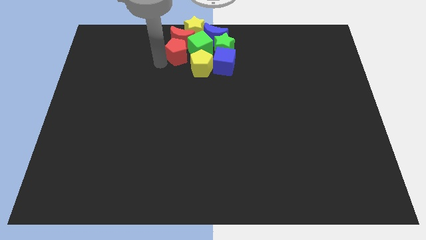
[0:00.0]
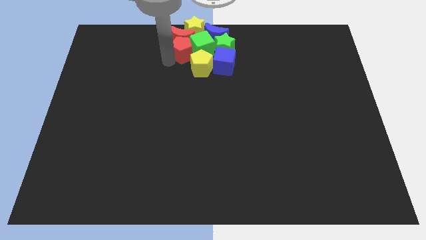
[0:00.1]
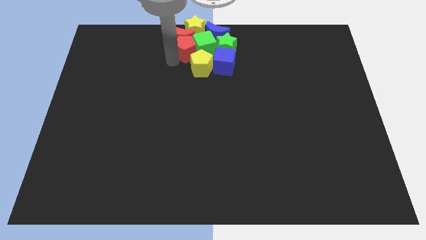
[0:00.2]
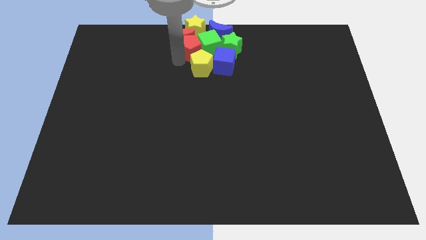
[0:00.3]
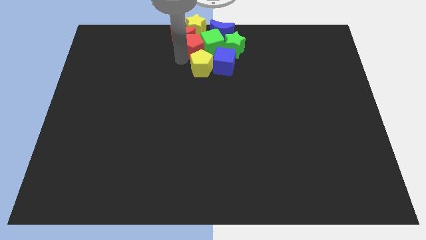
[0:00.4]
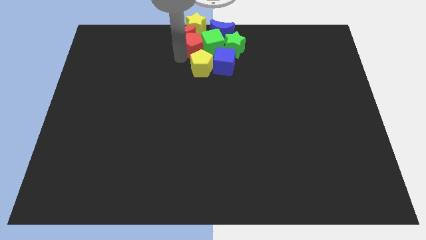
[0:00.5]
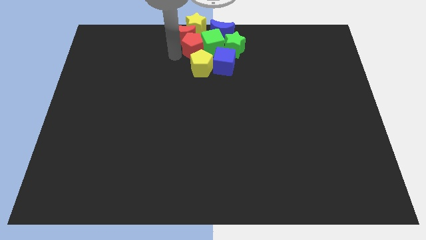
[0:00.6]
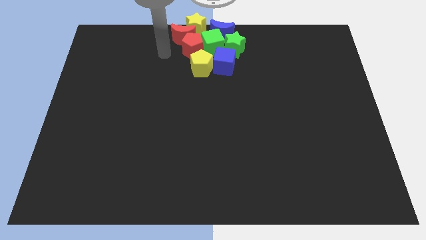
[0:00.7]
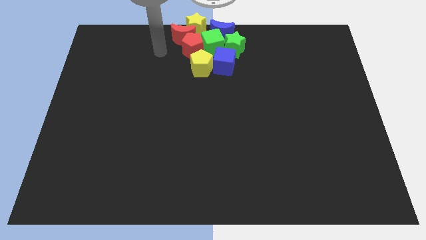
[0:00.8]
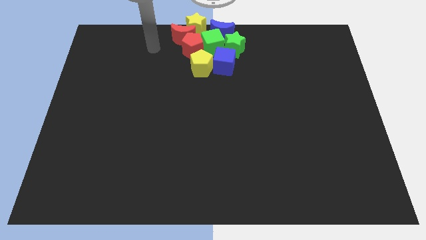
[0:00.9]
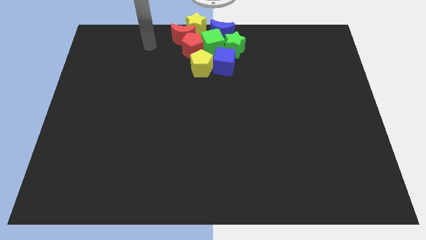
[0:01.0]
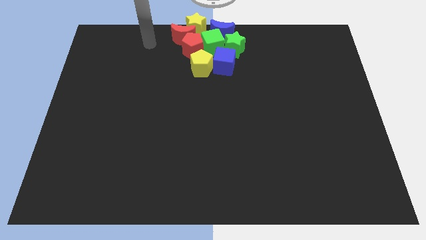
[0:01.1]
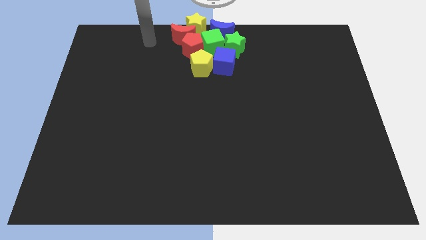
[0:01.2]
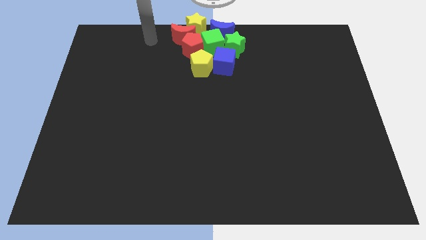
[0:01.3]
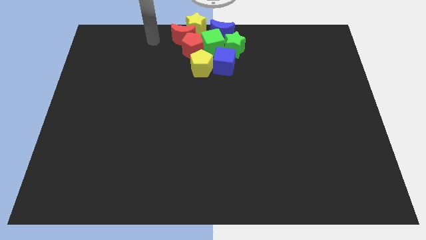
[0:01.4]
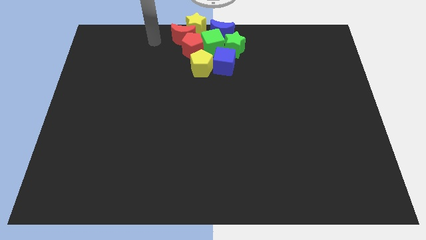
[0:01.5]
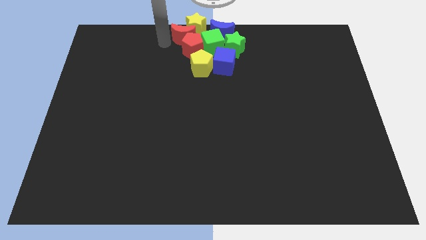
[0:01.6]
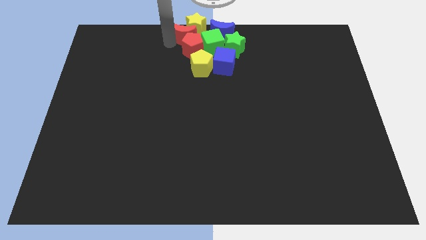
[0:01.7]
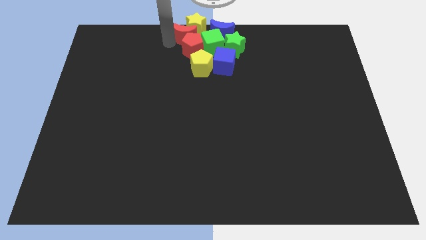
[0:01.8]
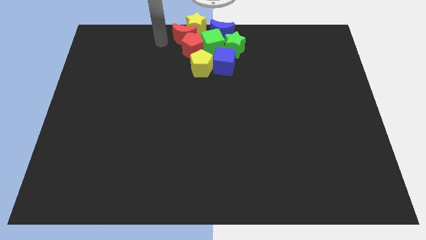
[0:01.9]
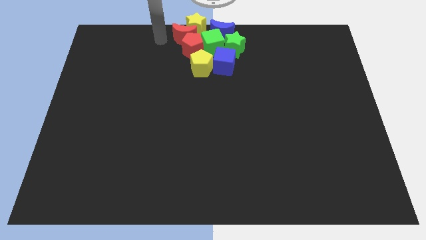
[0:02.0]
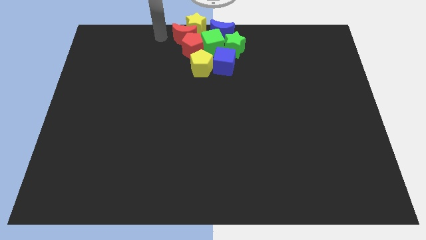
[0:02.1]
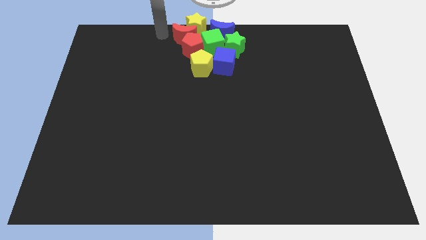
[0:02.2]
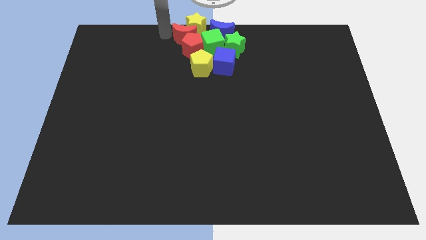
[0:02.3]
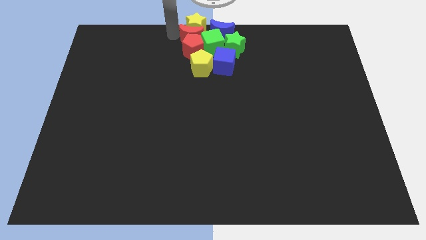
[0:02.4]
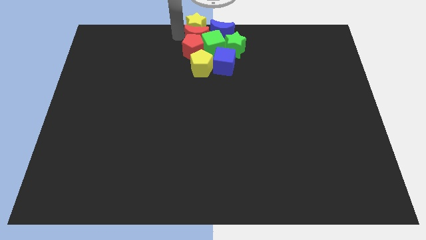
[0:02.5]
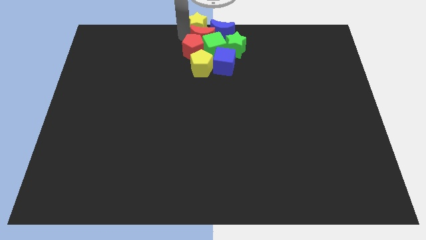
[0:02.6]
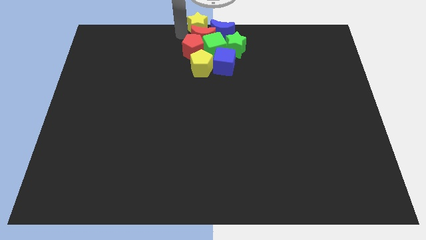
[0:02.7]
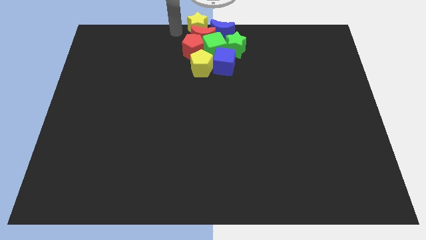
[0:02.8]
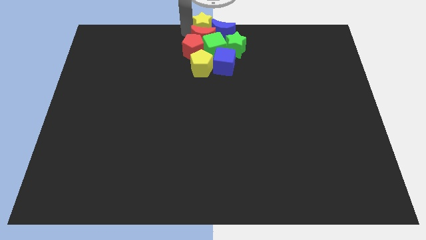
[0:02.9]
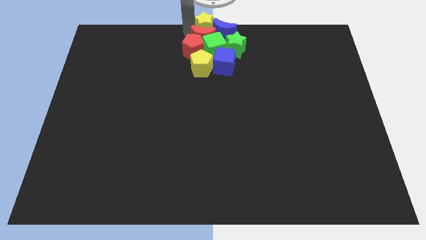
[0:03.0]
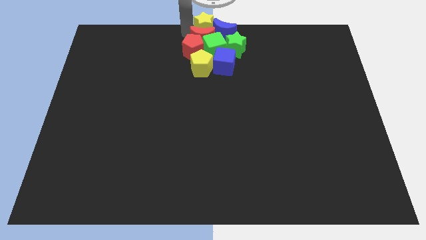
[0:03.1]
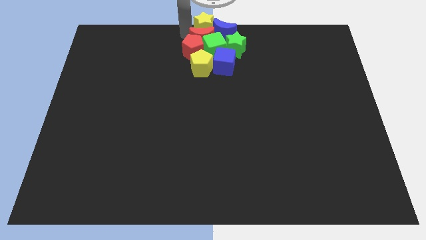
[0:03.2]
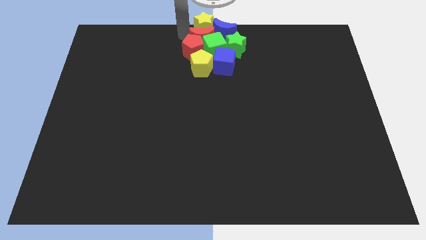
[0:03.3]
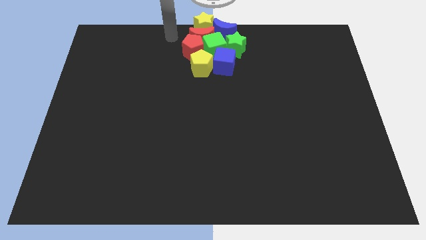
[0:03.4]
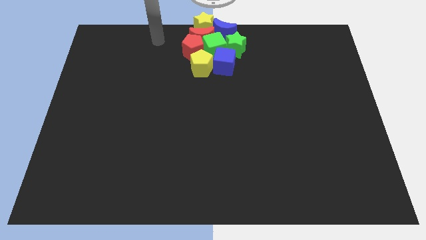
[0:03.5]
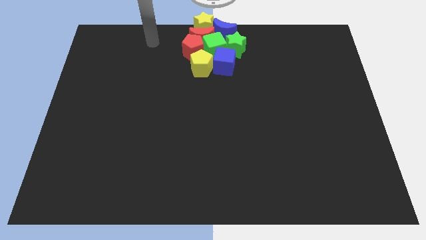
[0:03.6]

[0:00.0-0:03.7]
push the group of blocks towards the right side

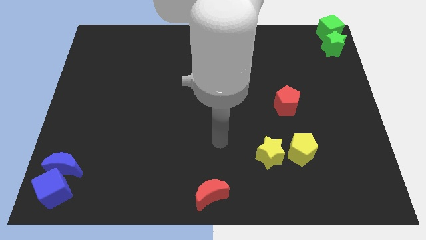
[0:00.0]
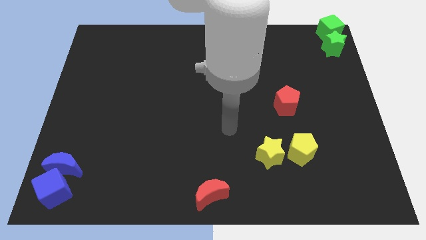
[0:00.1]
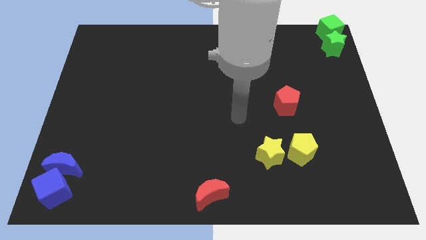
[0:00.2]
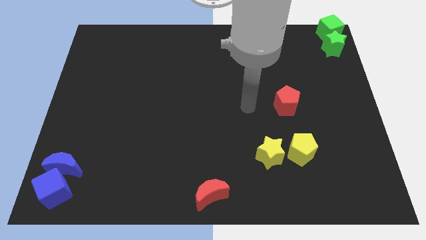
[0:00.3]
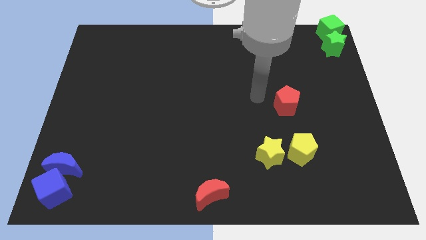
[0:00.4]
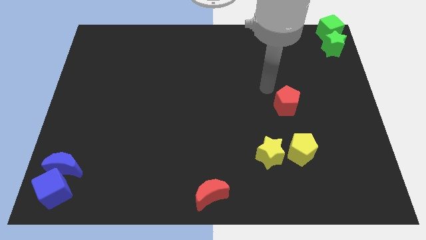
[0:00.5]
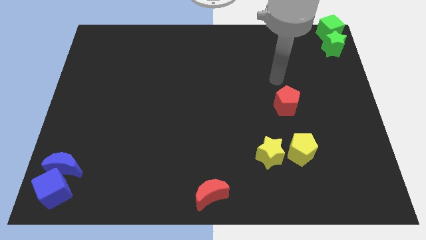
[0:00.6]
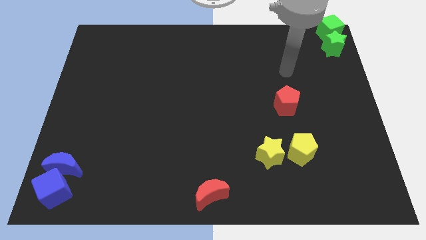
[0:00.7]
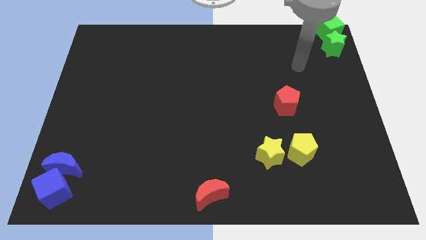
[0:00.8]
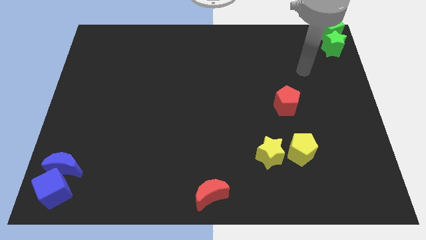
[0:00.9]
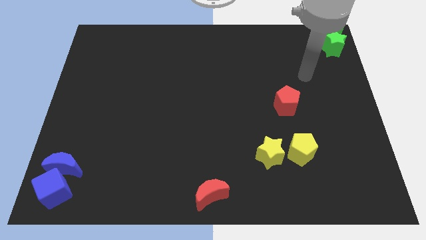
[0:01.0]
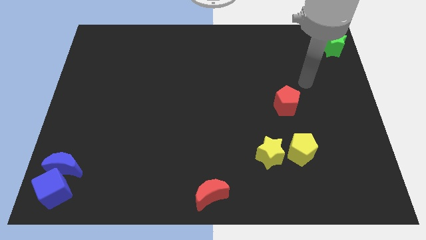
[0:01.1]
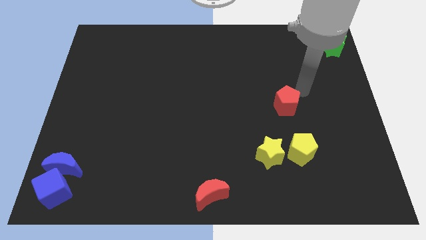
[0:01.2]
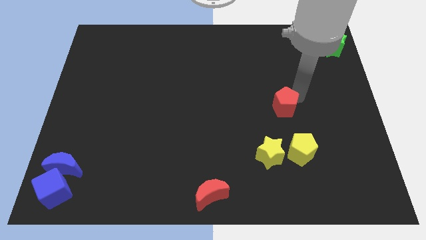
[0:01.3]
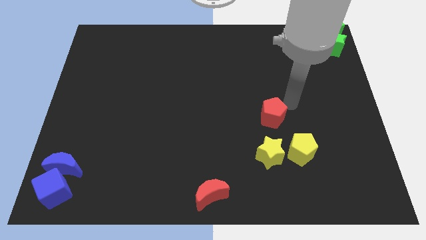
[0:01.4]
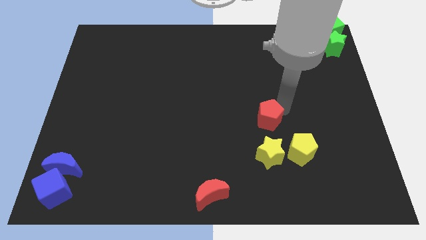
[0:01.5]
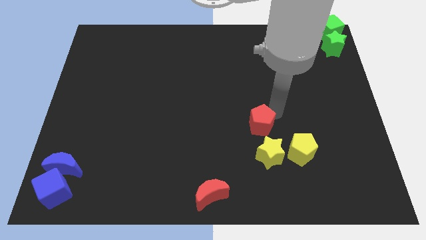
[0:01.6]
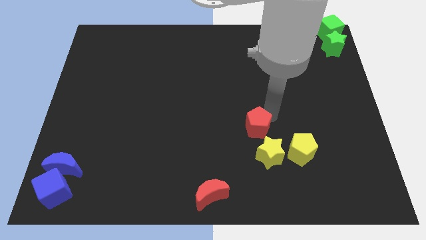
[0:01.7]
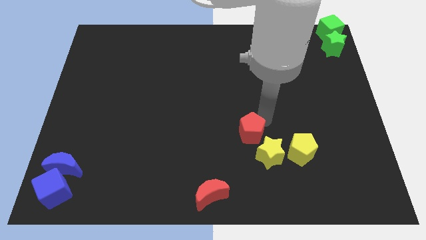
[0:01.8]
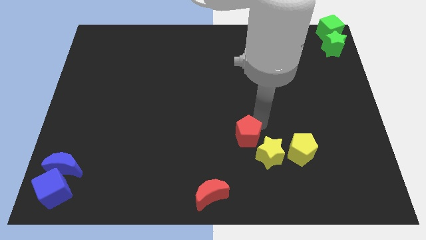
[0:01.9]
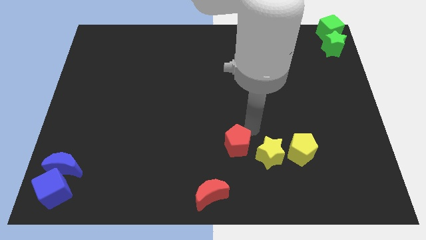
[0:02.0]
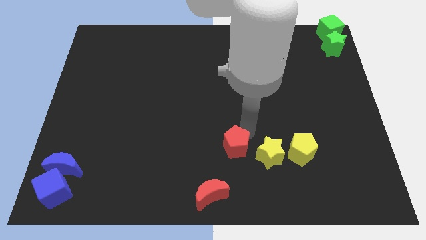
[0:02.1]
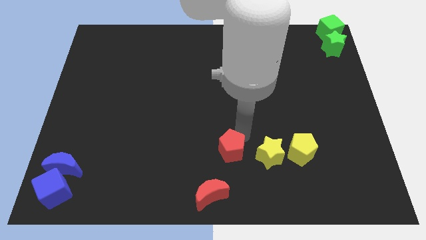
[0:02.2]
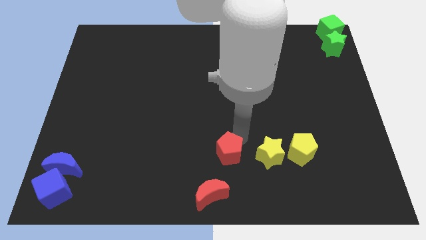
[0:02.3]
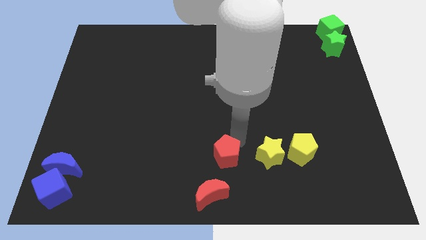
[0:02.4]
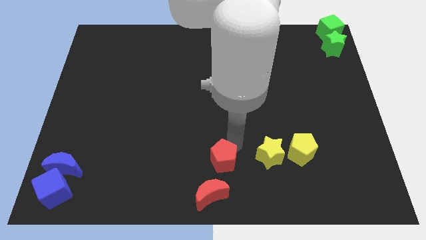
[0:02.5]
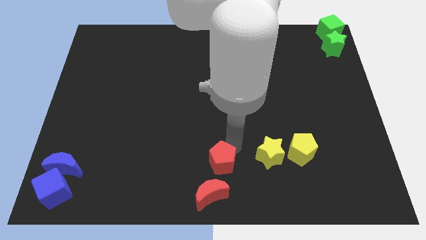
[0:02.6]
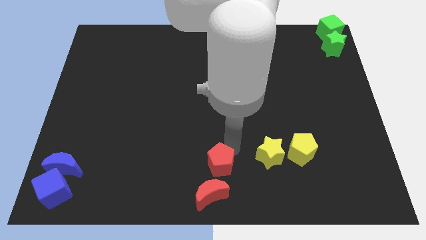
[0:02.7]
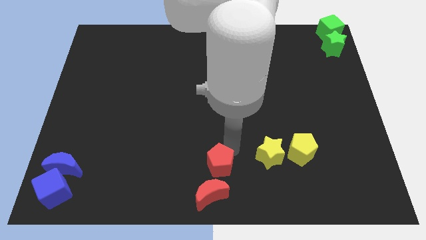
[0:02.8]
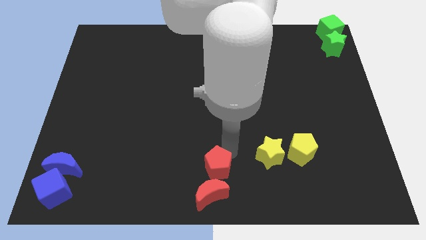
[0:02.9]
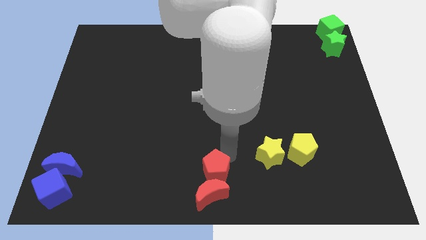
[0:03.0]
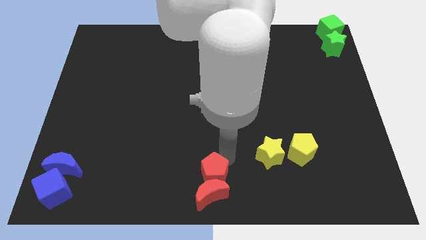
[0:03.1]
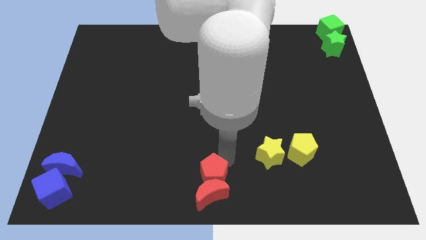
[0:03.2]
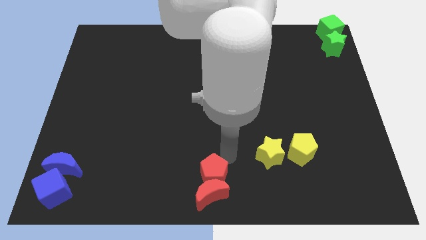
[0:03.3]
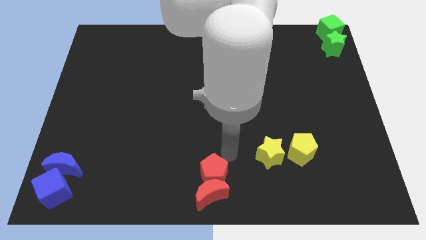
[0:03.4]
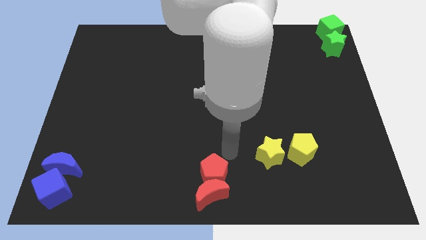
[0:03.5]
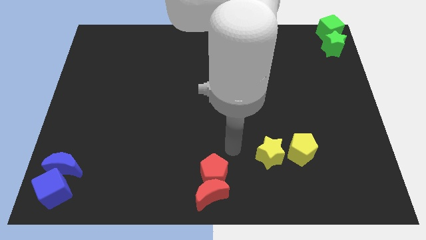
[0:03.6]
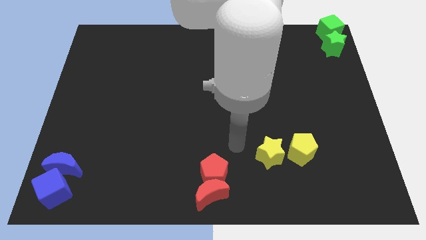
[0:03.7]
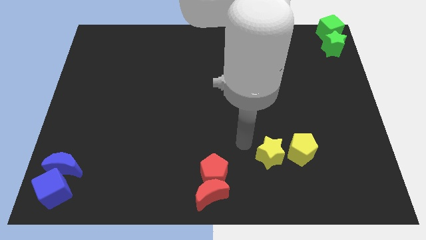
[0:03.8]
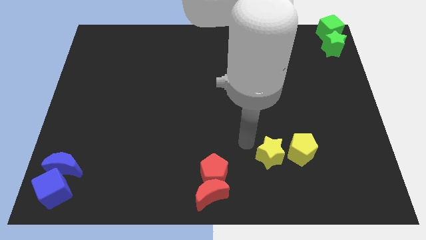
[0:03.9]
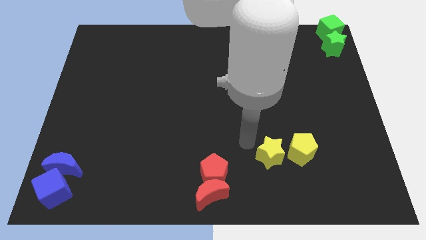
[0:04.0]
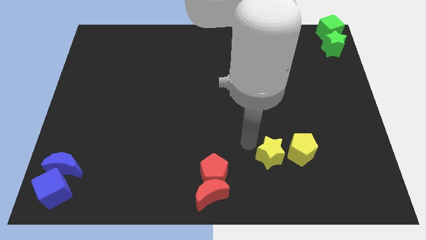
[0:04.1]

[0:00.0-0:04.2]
place the red pentagon above the red crescent

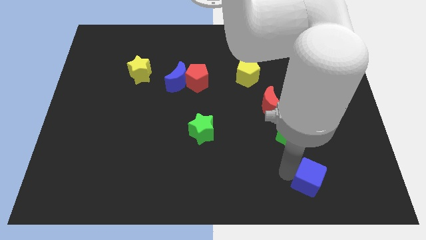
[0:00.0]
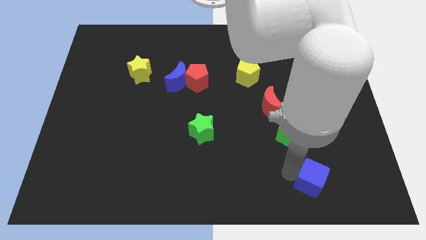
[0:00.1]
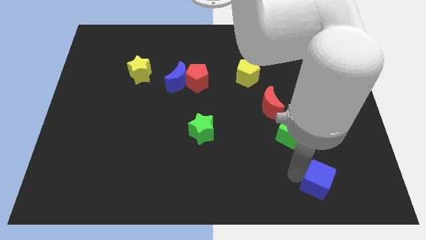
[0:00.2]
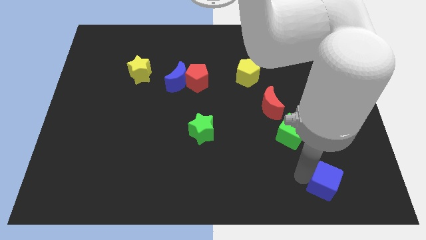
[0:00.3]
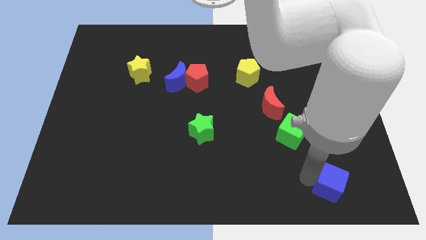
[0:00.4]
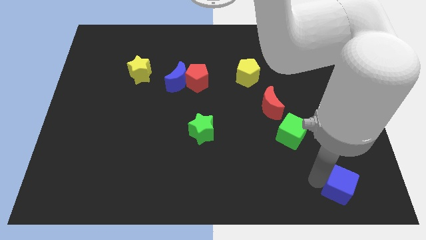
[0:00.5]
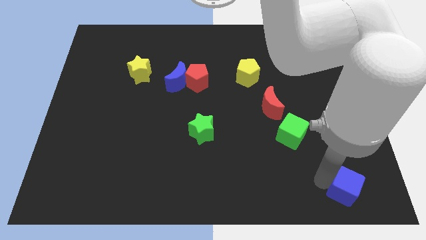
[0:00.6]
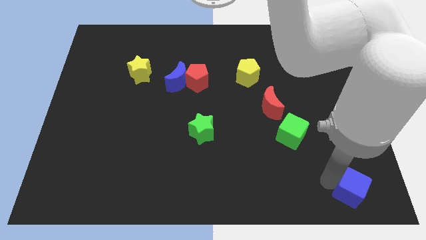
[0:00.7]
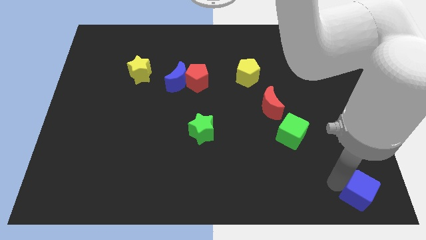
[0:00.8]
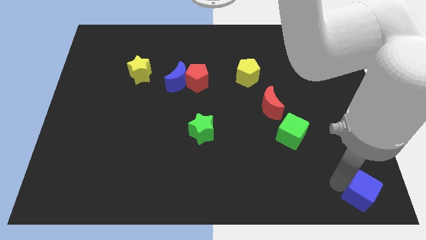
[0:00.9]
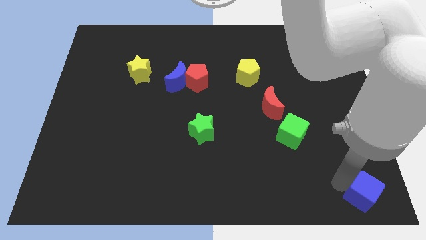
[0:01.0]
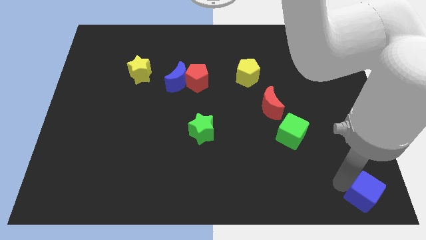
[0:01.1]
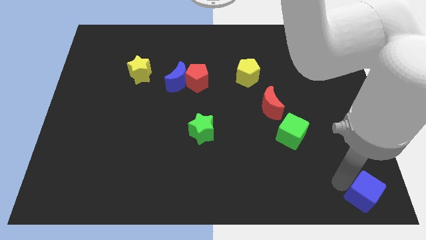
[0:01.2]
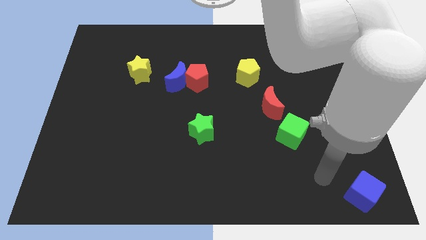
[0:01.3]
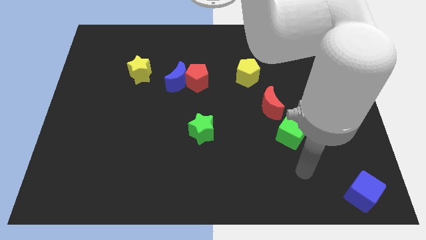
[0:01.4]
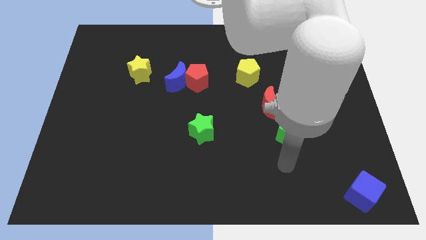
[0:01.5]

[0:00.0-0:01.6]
move the blue cube to the bottom right corner of the board
